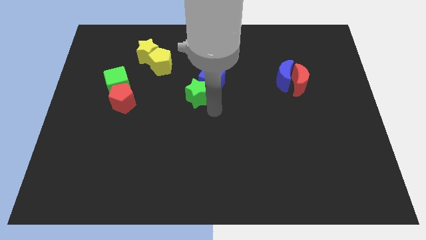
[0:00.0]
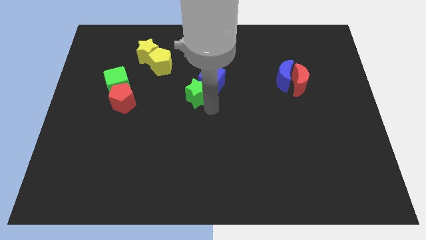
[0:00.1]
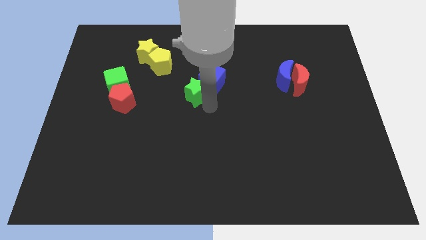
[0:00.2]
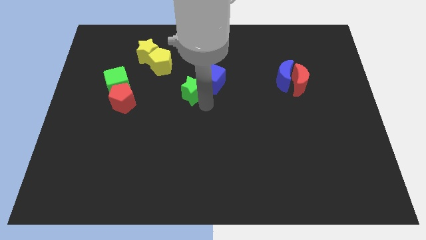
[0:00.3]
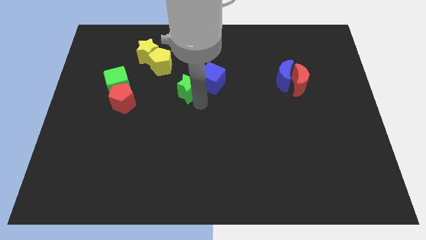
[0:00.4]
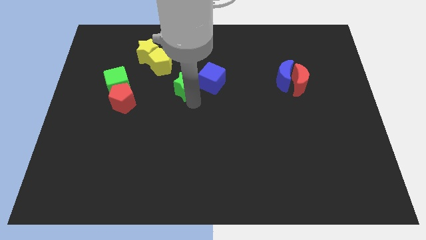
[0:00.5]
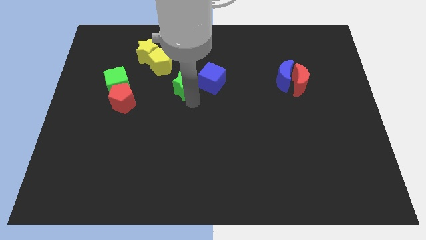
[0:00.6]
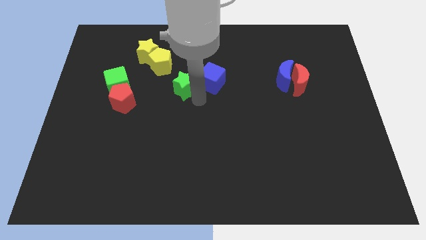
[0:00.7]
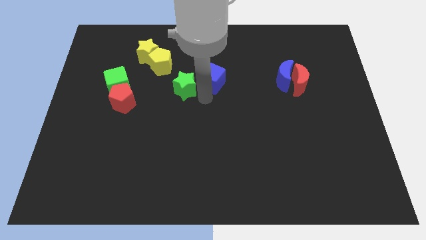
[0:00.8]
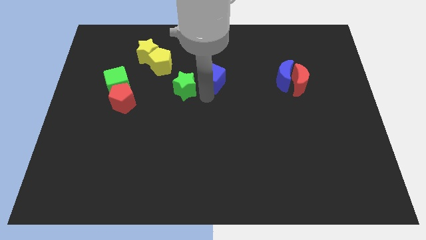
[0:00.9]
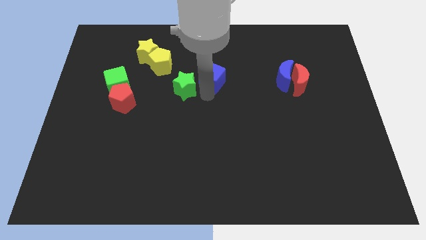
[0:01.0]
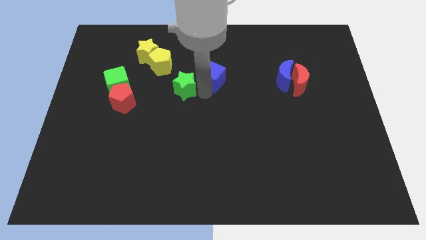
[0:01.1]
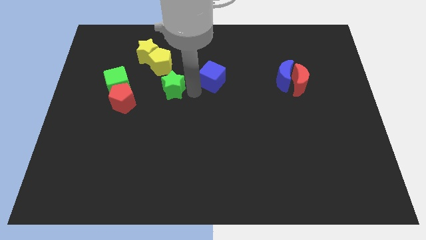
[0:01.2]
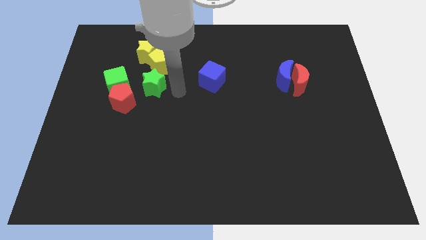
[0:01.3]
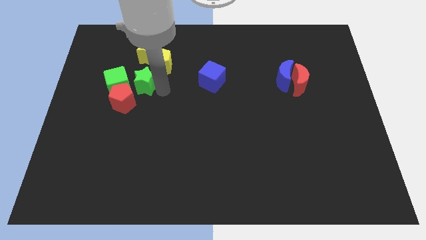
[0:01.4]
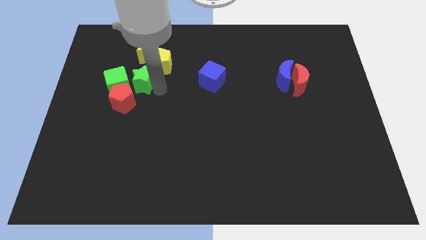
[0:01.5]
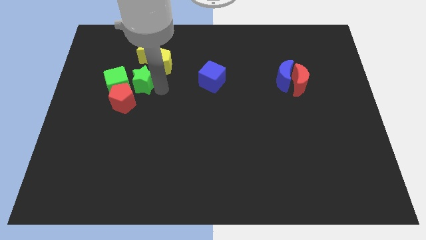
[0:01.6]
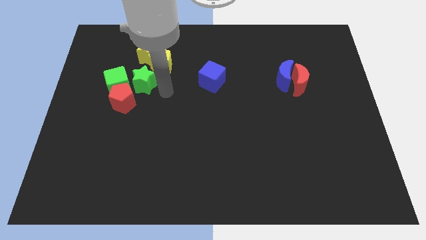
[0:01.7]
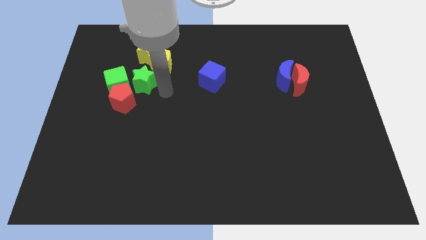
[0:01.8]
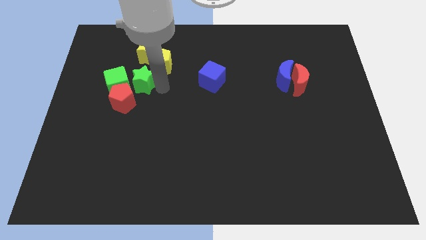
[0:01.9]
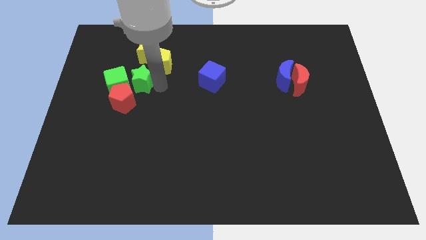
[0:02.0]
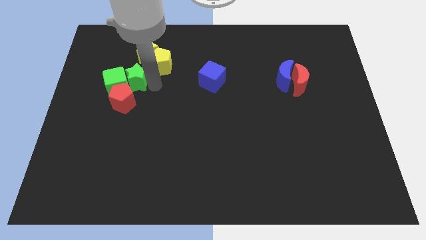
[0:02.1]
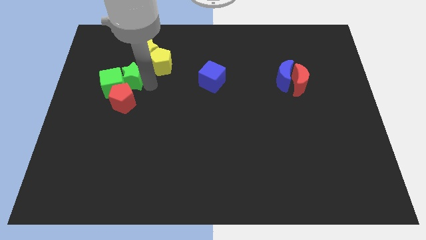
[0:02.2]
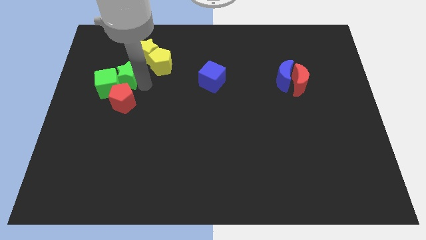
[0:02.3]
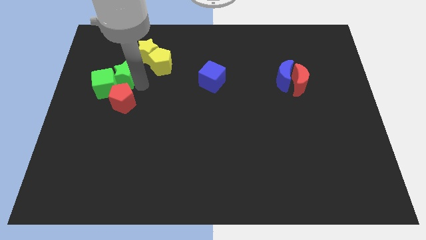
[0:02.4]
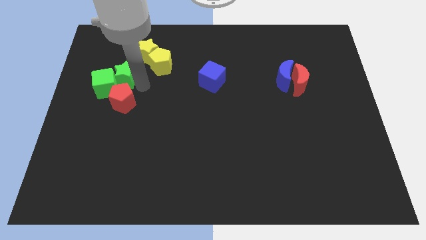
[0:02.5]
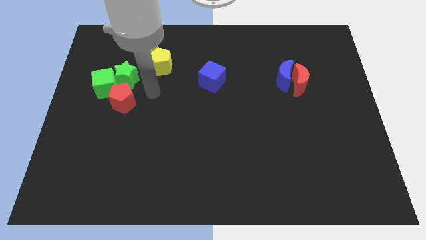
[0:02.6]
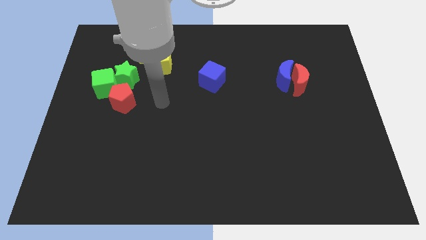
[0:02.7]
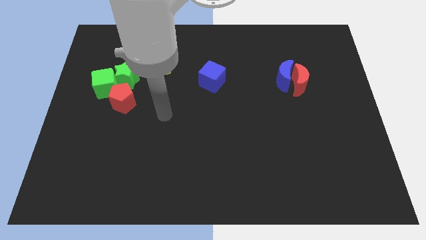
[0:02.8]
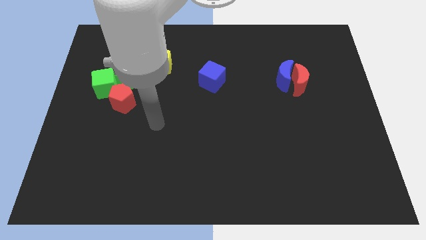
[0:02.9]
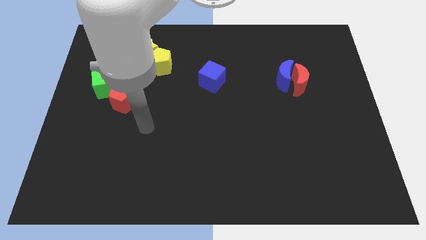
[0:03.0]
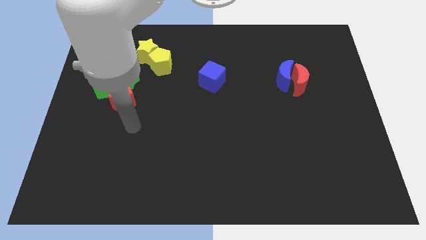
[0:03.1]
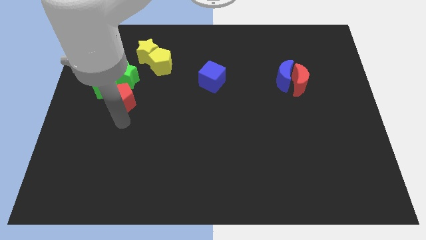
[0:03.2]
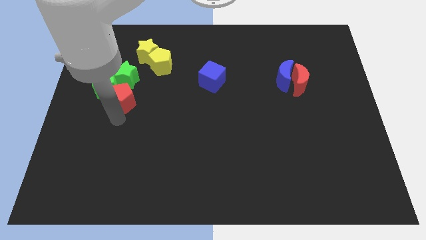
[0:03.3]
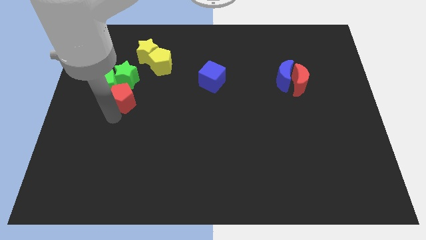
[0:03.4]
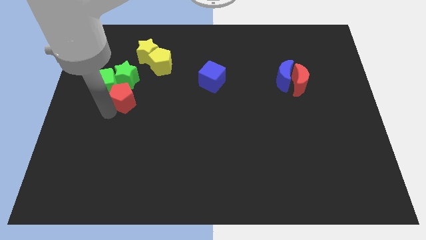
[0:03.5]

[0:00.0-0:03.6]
push the green star into the green cube

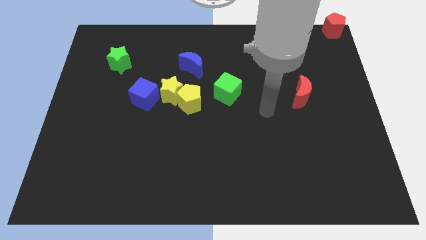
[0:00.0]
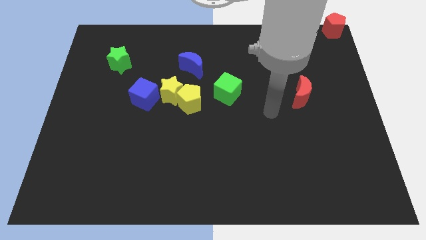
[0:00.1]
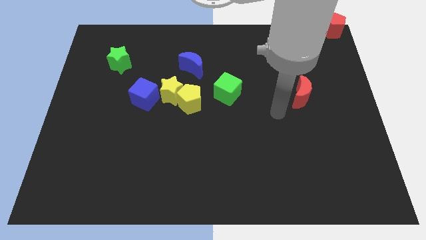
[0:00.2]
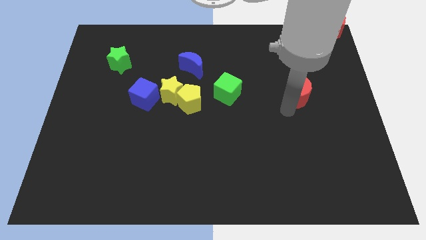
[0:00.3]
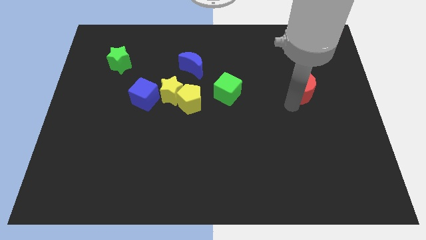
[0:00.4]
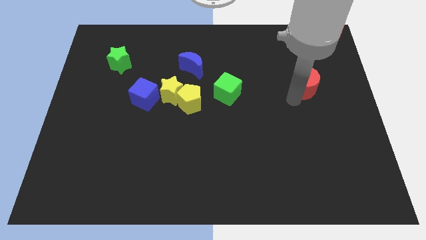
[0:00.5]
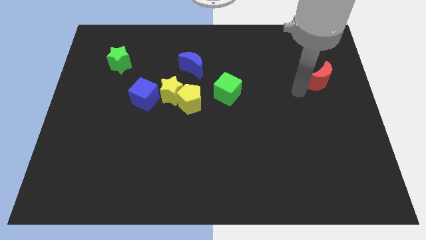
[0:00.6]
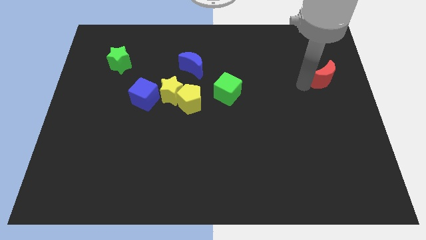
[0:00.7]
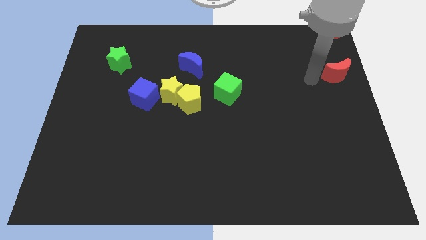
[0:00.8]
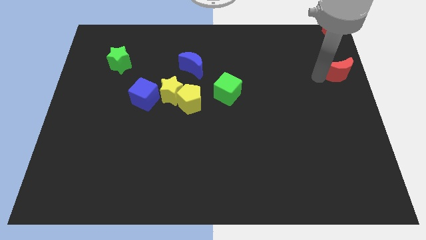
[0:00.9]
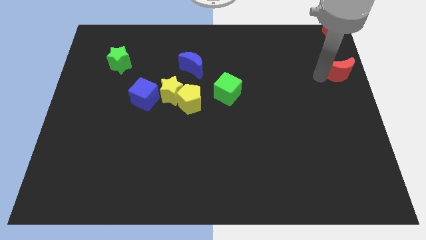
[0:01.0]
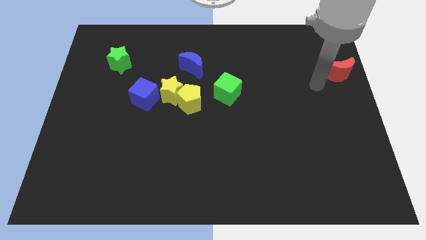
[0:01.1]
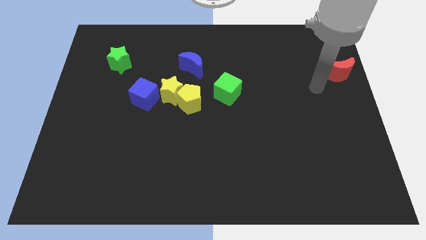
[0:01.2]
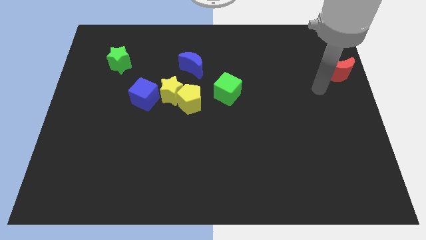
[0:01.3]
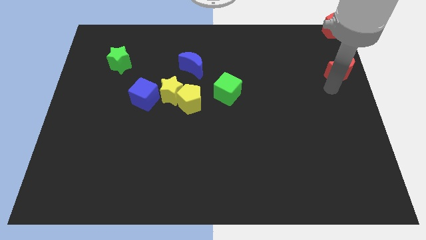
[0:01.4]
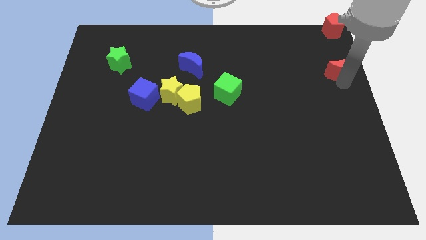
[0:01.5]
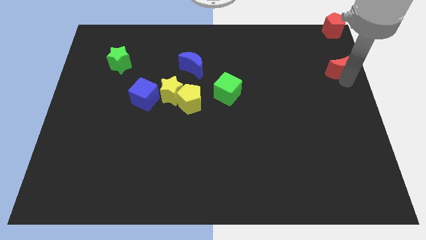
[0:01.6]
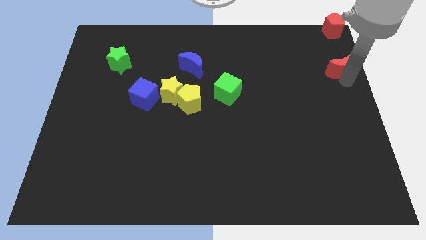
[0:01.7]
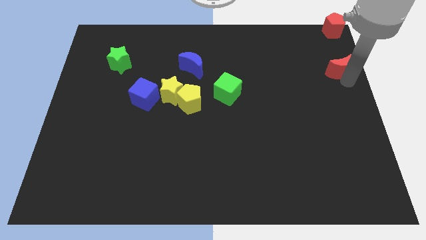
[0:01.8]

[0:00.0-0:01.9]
place the red moon below the red pentagon

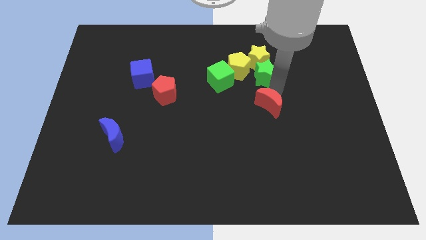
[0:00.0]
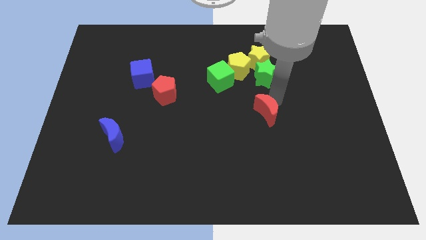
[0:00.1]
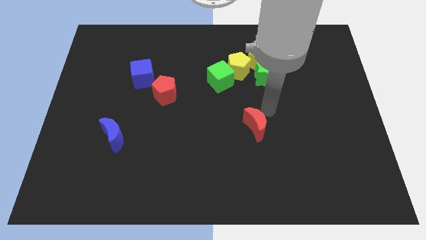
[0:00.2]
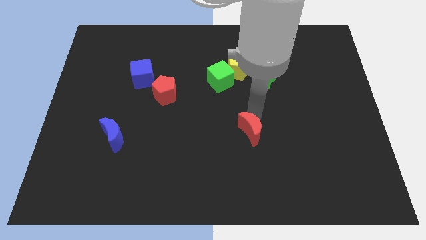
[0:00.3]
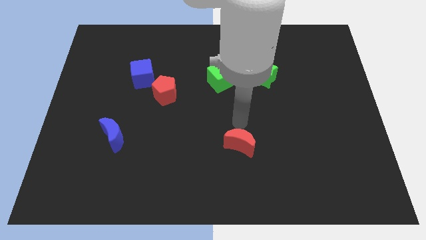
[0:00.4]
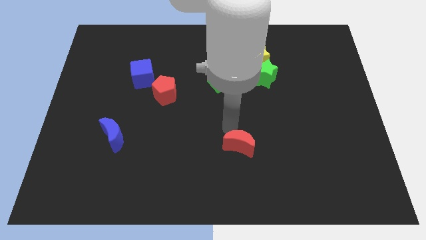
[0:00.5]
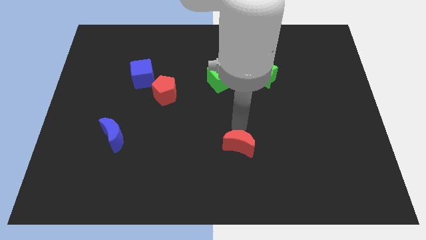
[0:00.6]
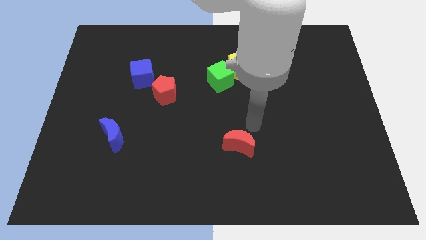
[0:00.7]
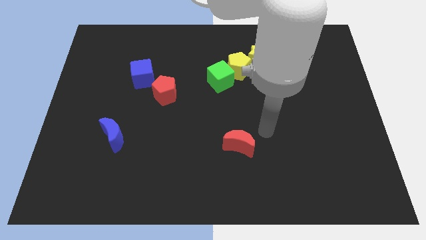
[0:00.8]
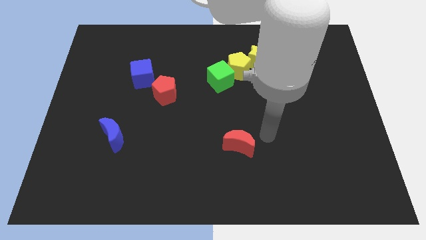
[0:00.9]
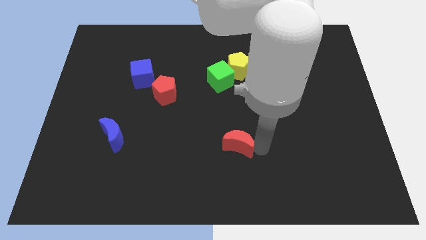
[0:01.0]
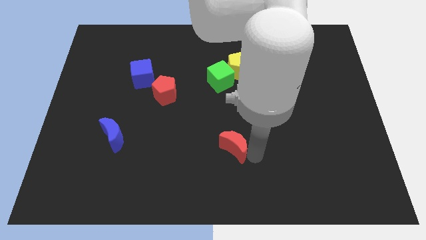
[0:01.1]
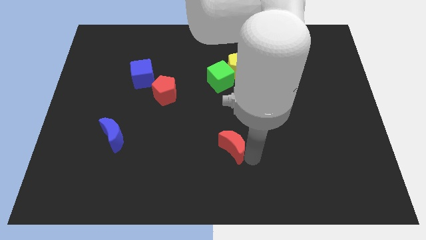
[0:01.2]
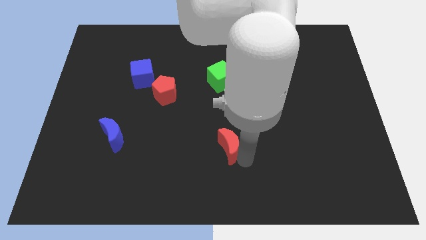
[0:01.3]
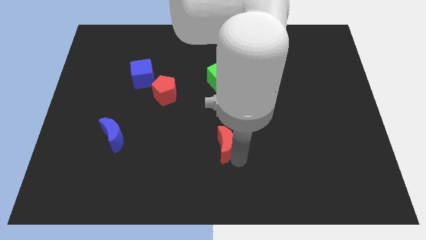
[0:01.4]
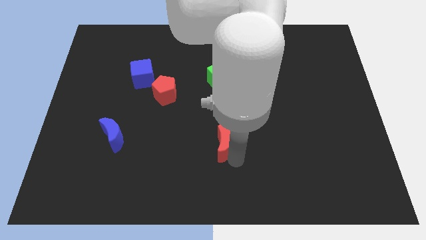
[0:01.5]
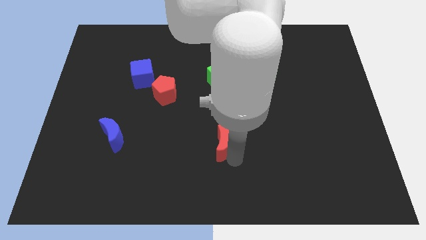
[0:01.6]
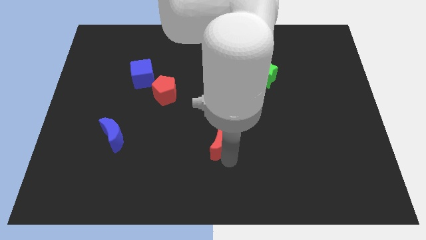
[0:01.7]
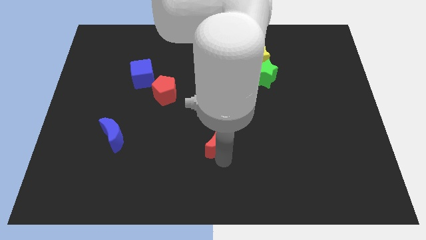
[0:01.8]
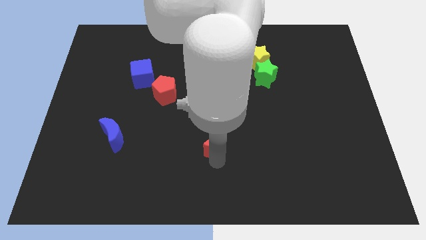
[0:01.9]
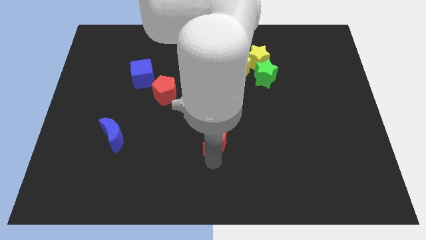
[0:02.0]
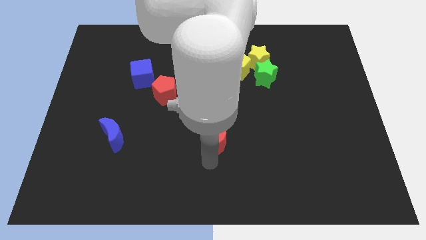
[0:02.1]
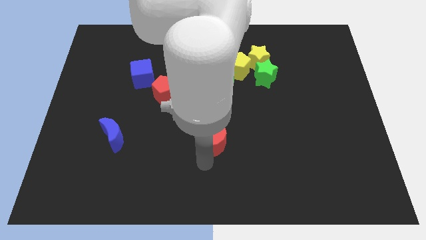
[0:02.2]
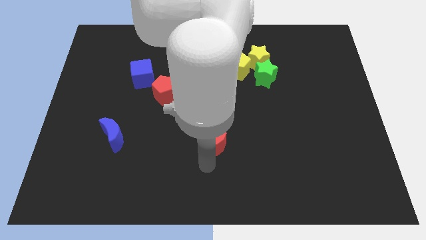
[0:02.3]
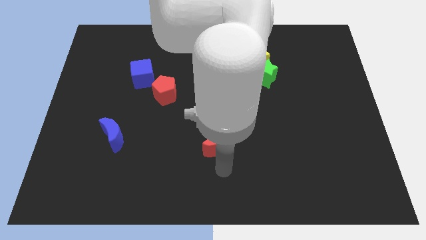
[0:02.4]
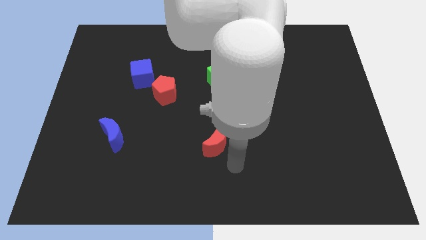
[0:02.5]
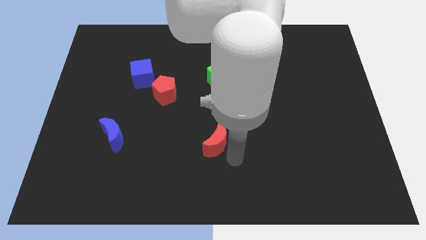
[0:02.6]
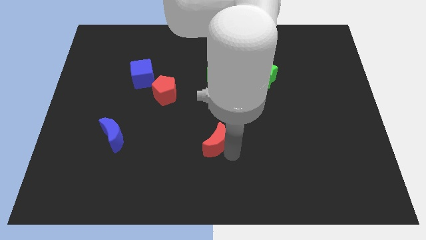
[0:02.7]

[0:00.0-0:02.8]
push the red crescent vertically below the green cube

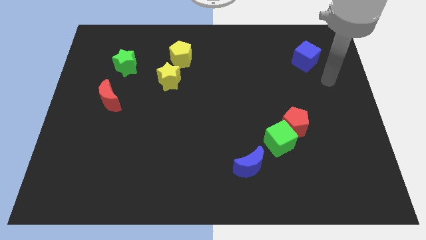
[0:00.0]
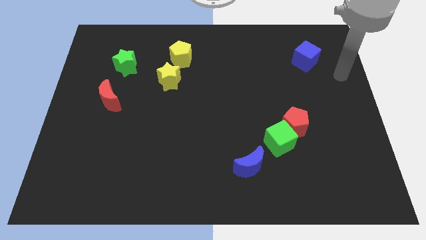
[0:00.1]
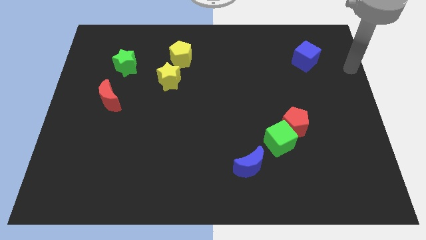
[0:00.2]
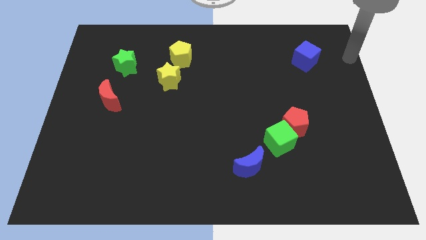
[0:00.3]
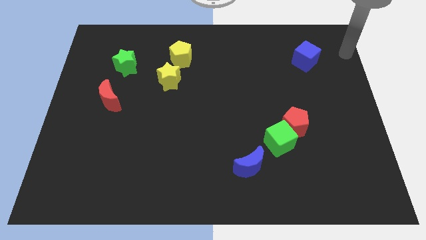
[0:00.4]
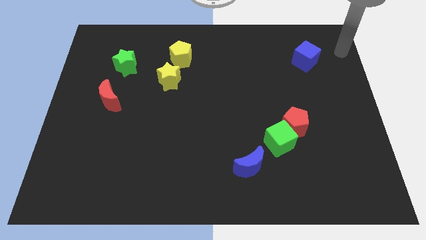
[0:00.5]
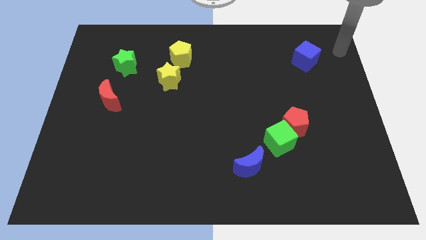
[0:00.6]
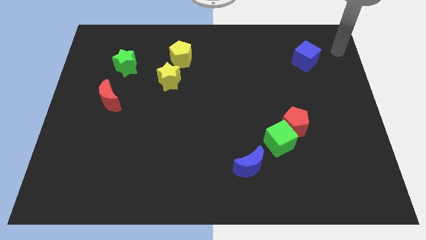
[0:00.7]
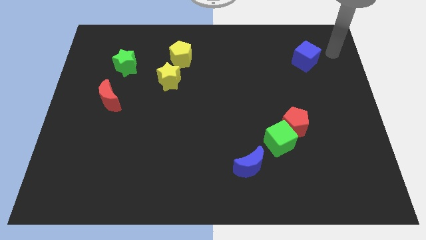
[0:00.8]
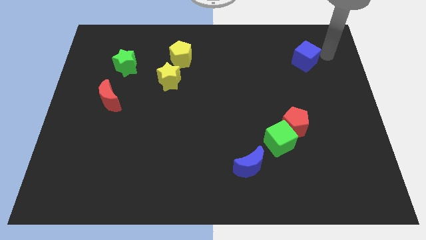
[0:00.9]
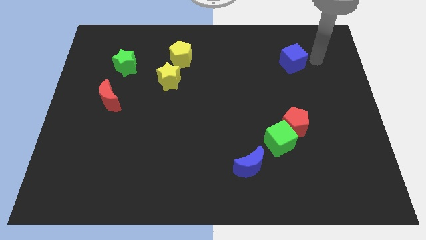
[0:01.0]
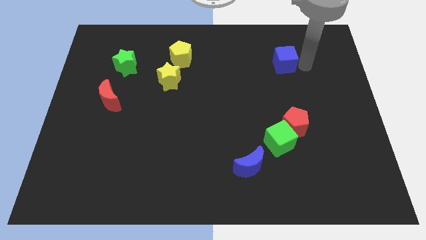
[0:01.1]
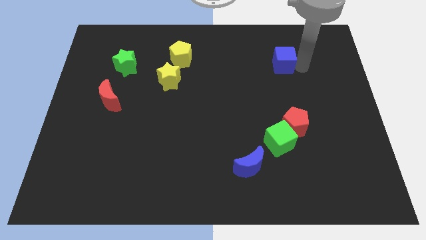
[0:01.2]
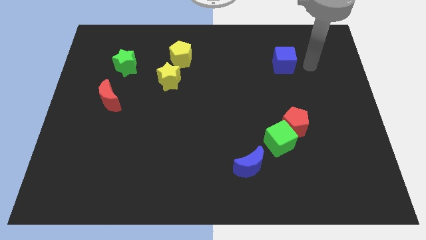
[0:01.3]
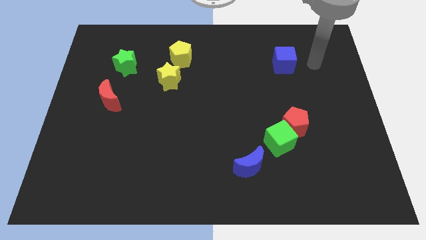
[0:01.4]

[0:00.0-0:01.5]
slightly push the blue cube to the left of the board
